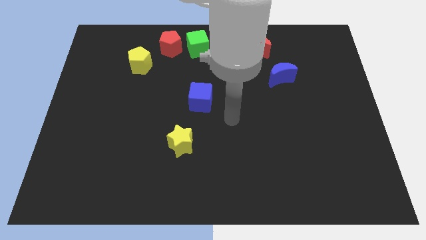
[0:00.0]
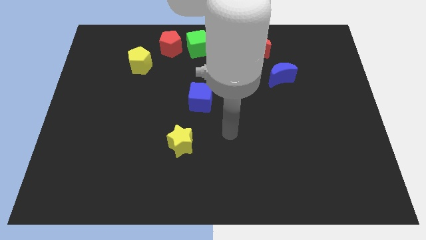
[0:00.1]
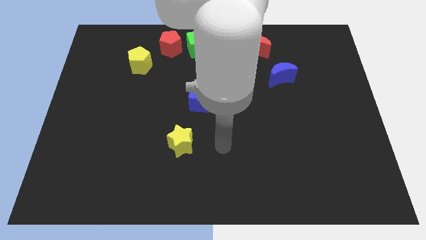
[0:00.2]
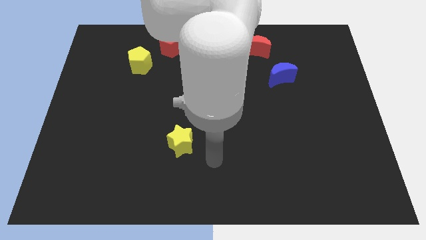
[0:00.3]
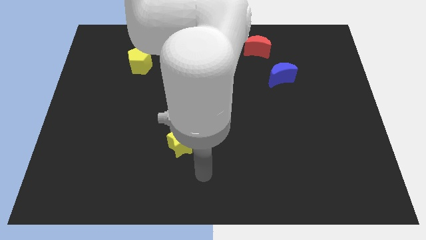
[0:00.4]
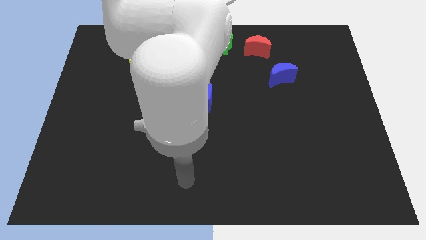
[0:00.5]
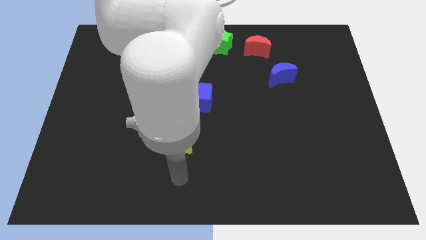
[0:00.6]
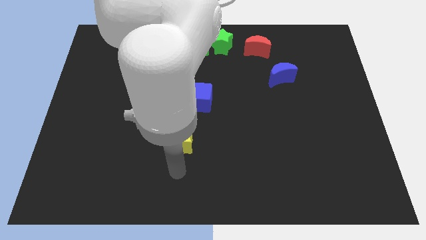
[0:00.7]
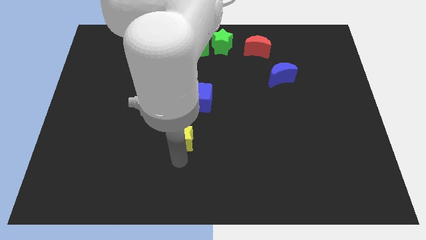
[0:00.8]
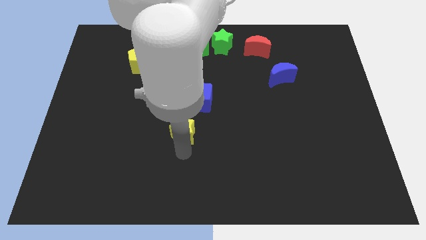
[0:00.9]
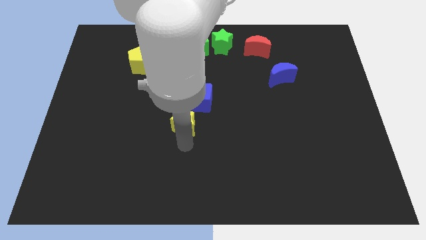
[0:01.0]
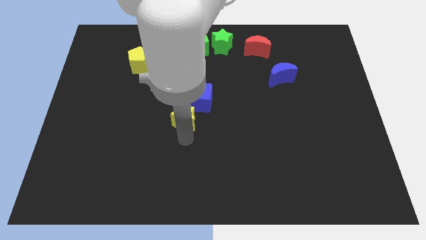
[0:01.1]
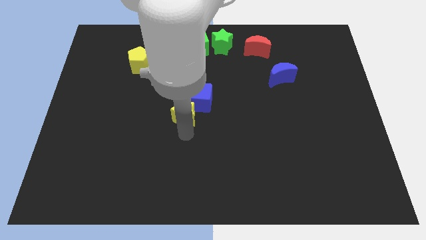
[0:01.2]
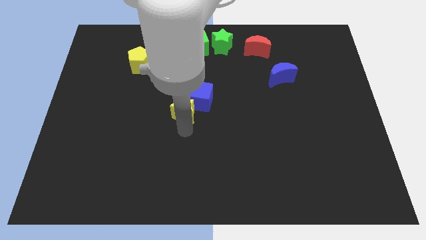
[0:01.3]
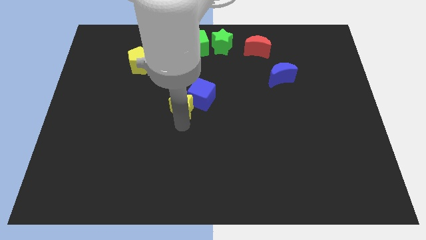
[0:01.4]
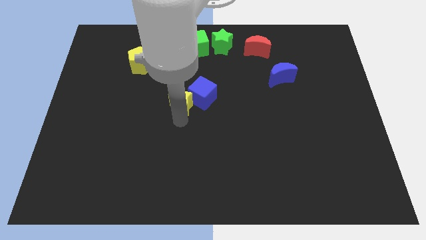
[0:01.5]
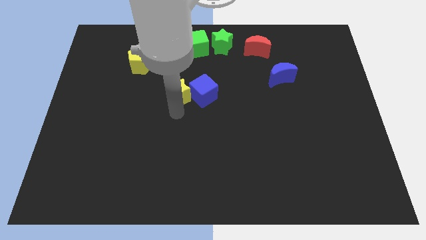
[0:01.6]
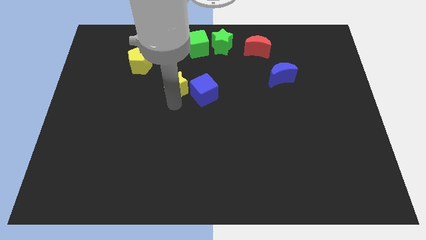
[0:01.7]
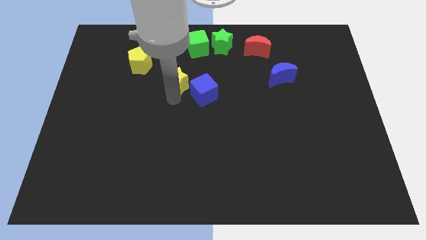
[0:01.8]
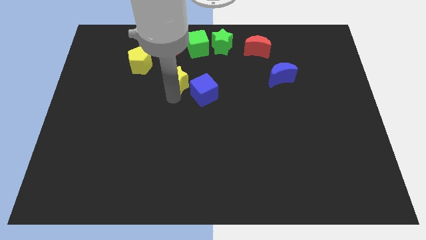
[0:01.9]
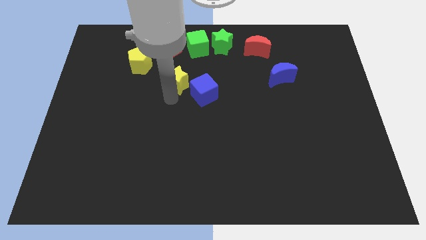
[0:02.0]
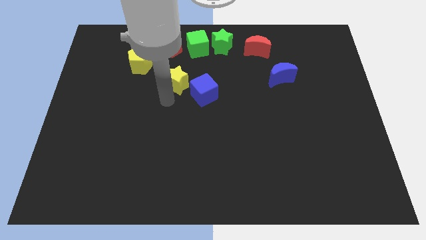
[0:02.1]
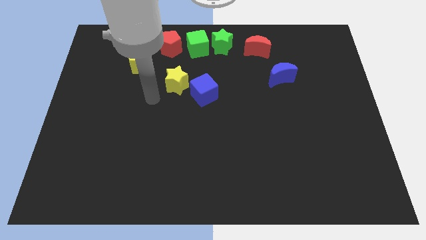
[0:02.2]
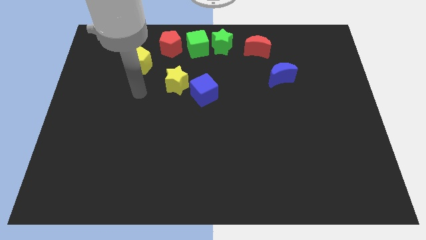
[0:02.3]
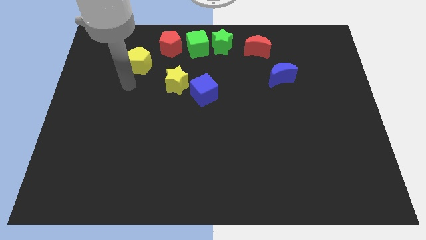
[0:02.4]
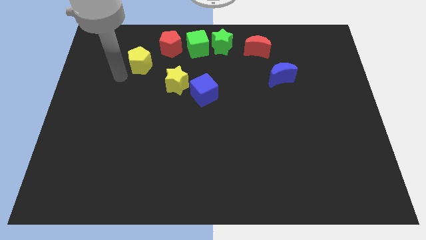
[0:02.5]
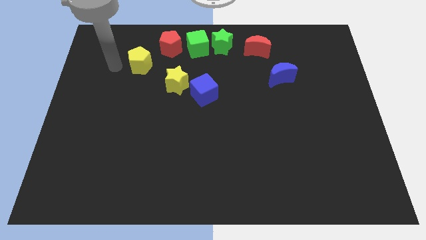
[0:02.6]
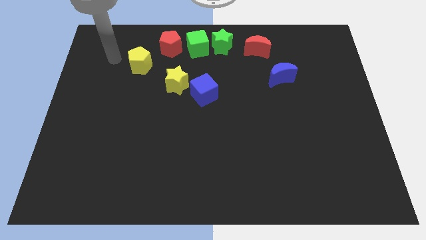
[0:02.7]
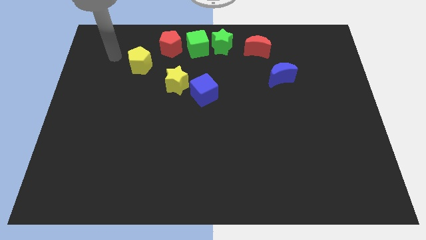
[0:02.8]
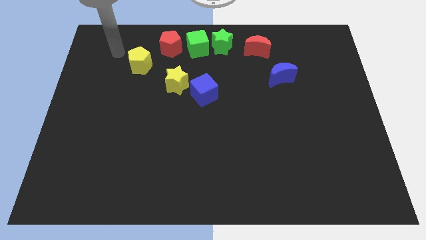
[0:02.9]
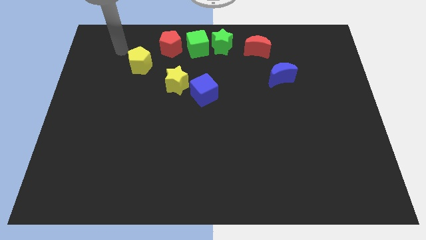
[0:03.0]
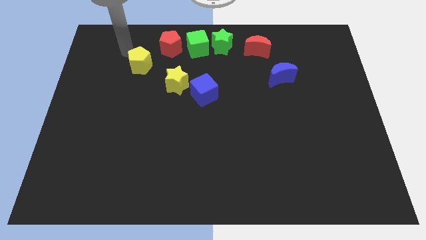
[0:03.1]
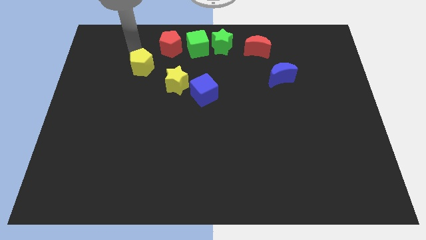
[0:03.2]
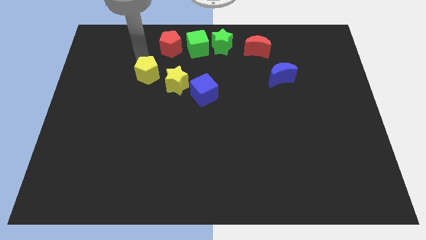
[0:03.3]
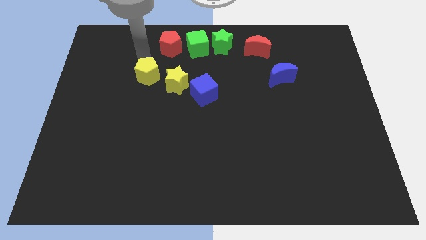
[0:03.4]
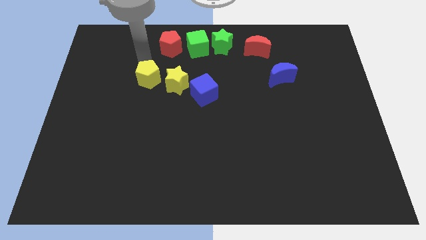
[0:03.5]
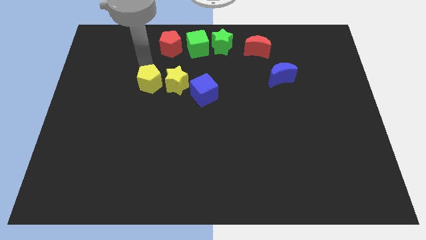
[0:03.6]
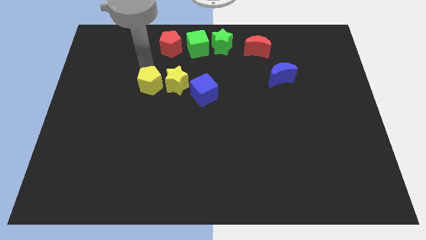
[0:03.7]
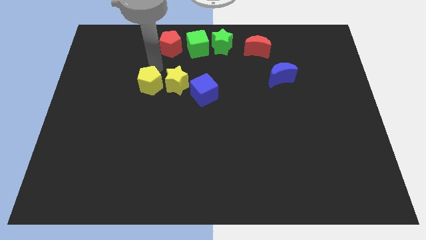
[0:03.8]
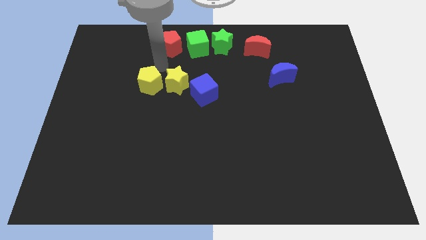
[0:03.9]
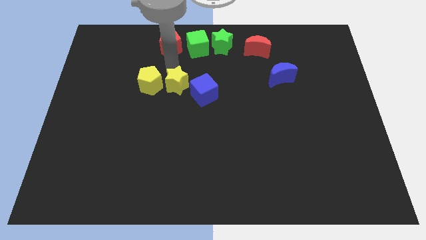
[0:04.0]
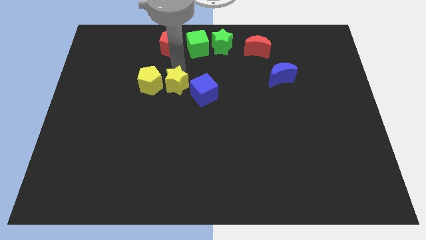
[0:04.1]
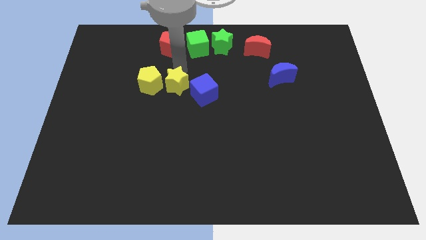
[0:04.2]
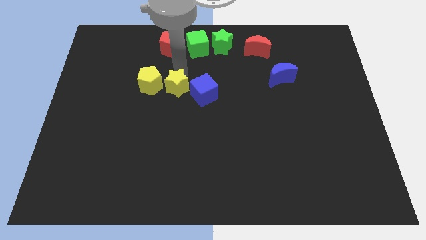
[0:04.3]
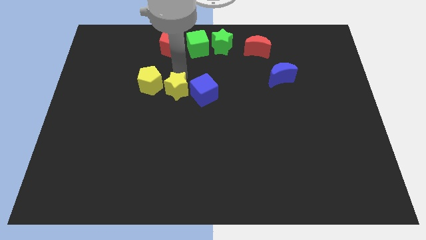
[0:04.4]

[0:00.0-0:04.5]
make a horizontal line with the yellow blocks and the blue cube

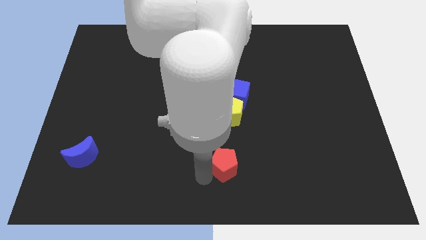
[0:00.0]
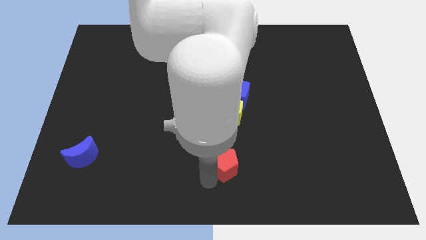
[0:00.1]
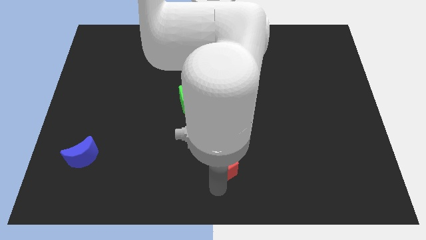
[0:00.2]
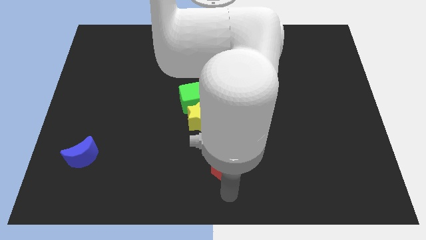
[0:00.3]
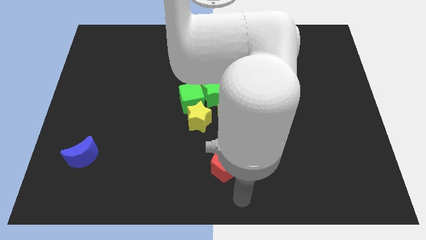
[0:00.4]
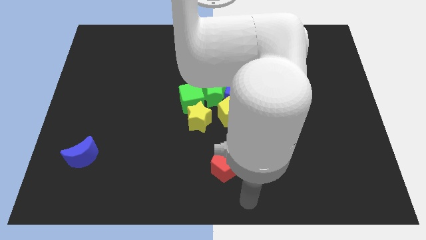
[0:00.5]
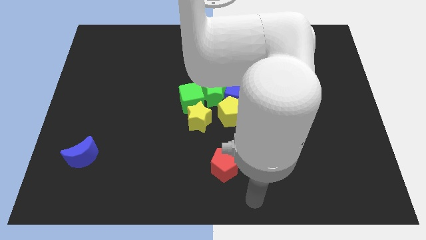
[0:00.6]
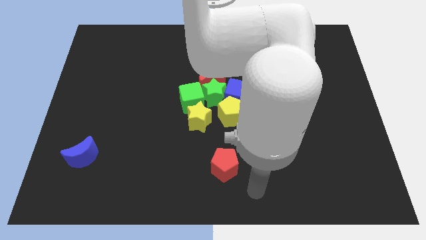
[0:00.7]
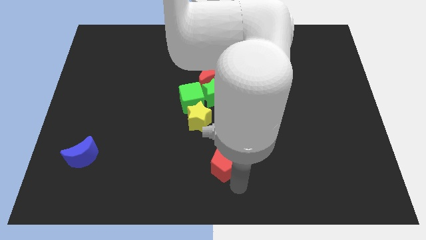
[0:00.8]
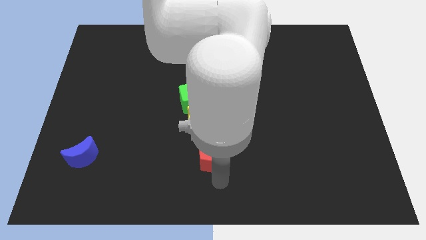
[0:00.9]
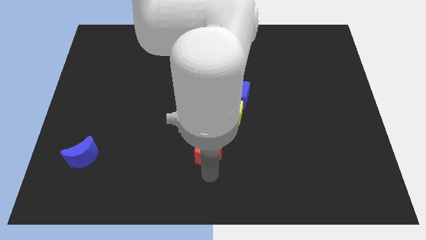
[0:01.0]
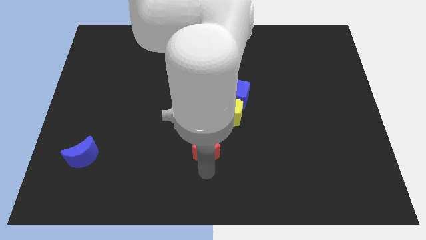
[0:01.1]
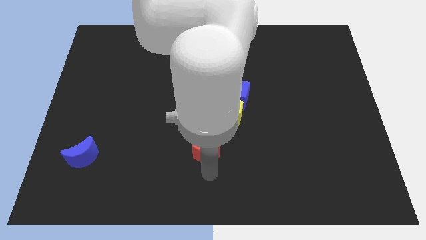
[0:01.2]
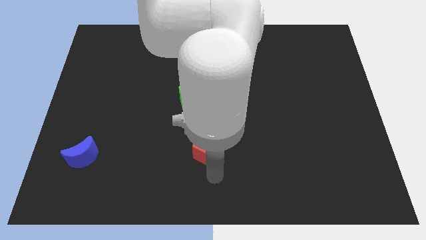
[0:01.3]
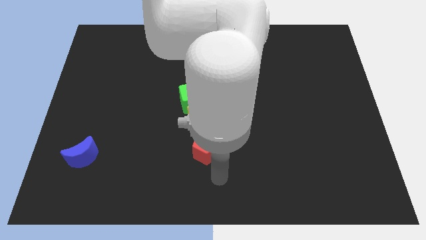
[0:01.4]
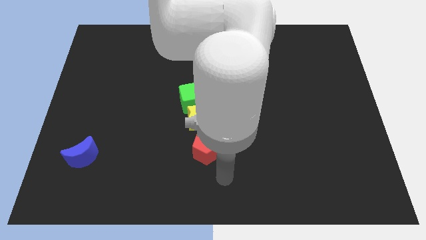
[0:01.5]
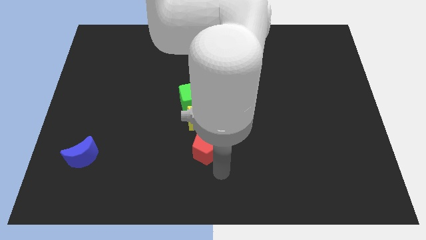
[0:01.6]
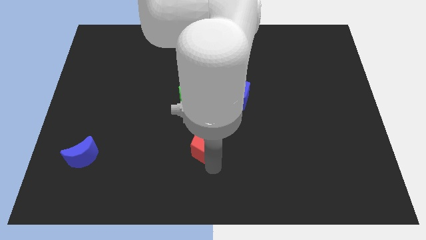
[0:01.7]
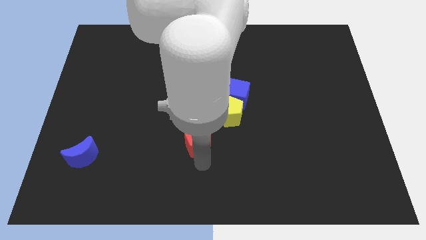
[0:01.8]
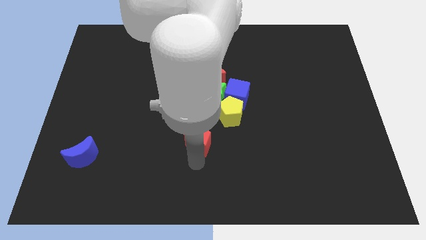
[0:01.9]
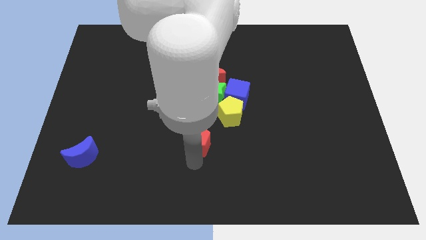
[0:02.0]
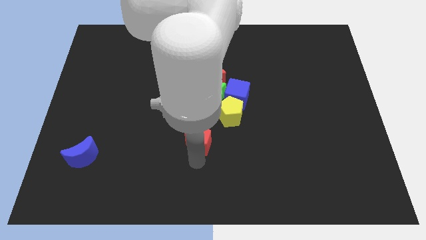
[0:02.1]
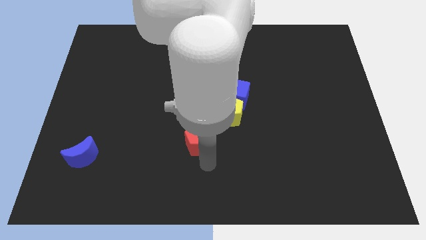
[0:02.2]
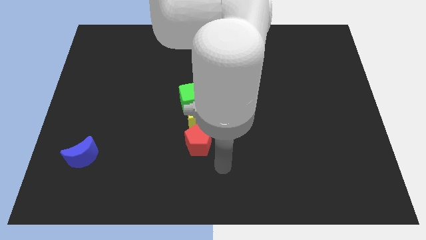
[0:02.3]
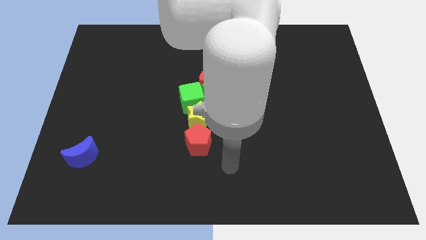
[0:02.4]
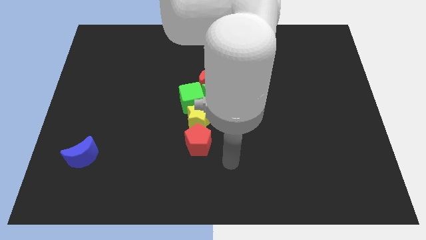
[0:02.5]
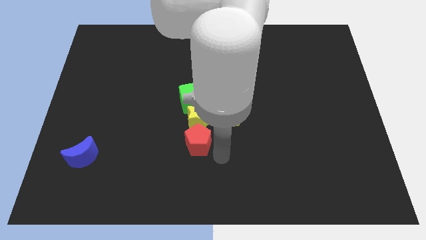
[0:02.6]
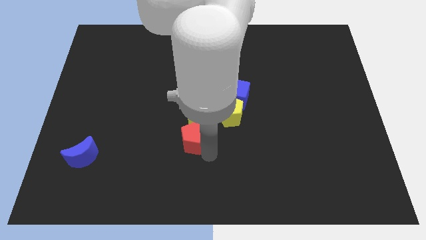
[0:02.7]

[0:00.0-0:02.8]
place the red pentagon down to the yellow star

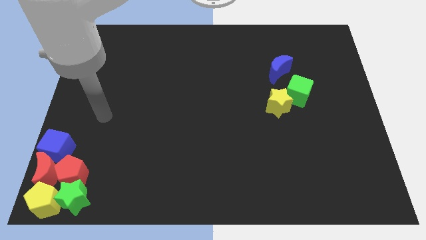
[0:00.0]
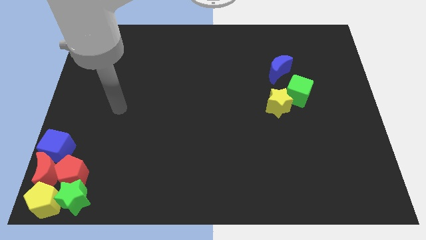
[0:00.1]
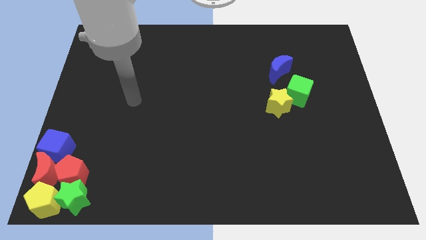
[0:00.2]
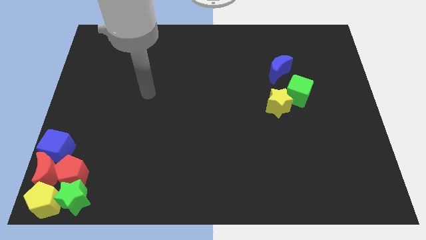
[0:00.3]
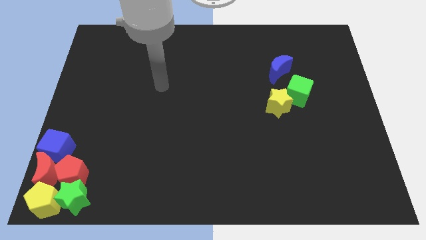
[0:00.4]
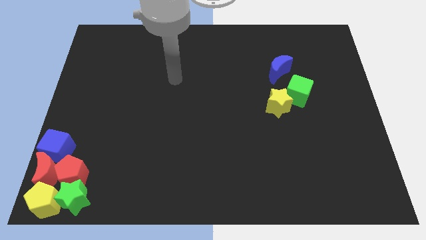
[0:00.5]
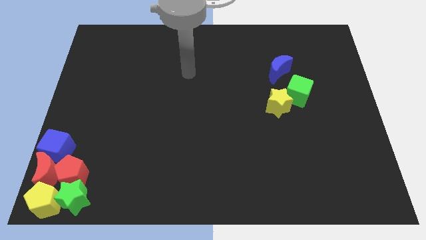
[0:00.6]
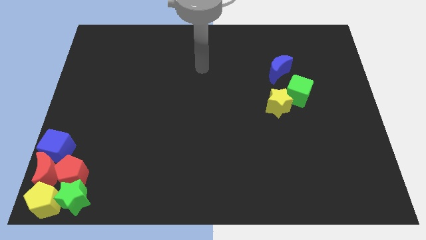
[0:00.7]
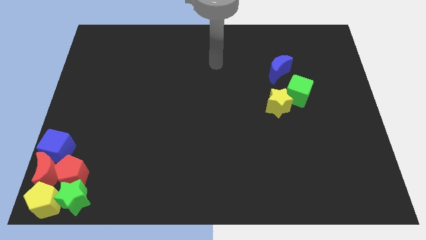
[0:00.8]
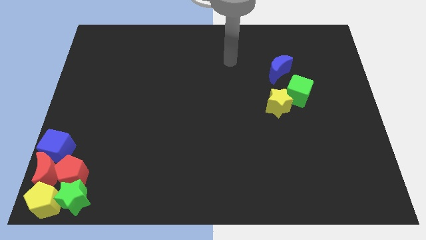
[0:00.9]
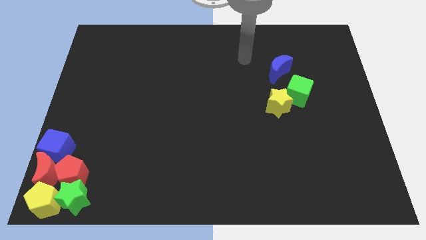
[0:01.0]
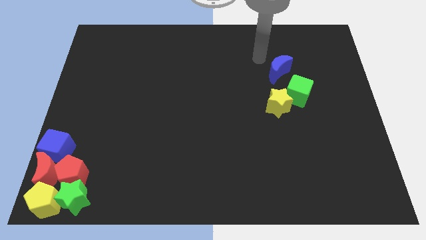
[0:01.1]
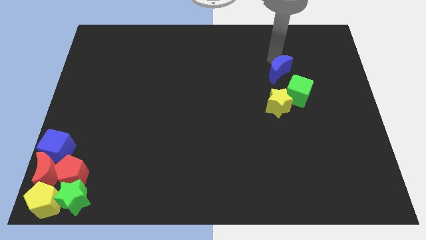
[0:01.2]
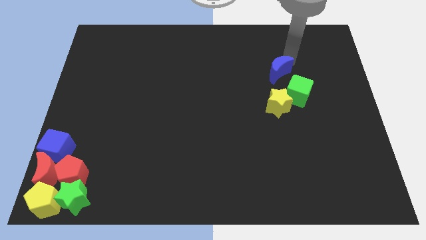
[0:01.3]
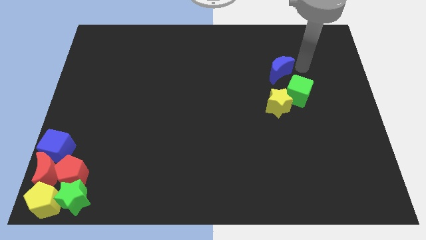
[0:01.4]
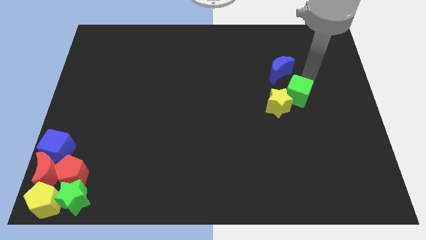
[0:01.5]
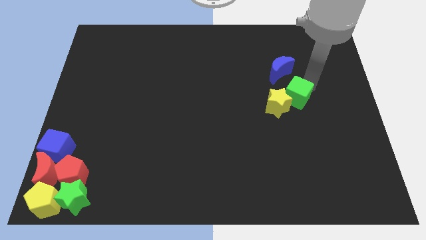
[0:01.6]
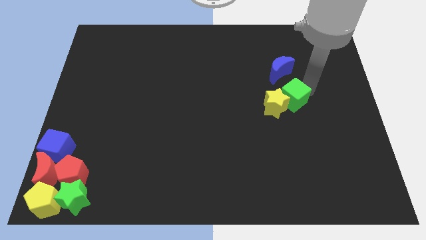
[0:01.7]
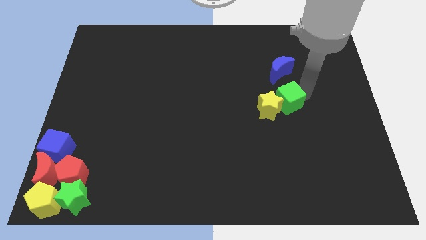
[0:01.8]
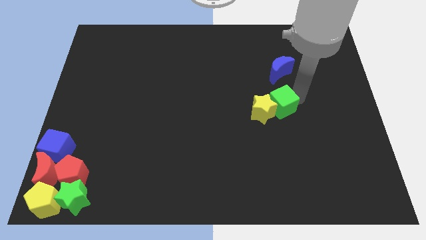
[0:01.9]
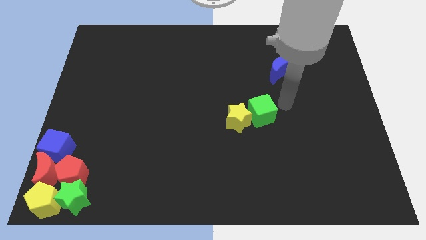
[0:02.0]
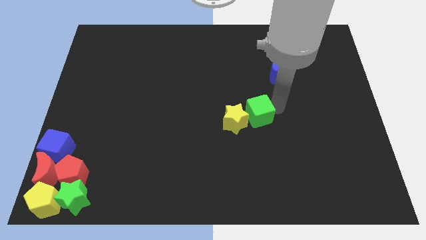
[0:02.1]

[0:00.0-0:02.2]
push the yellow star with green cube
